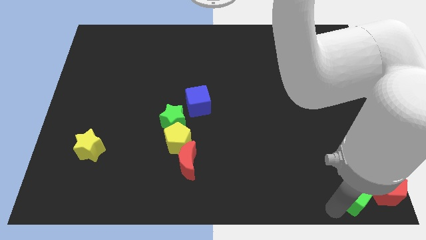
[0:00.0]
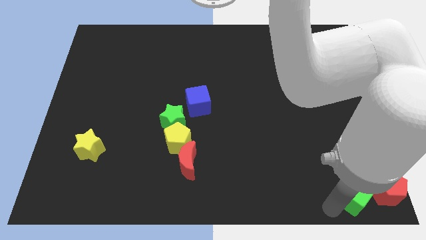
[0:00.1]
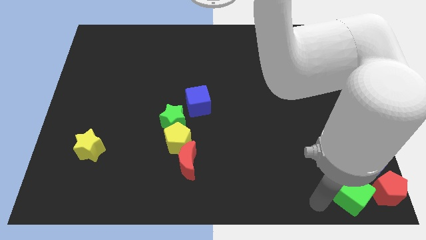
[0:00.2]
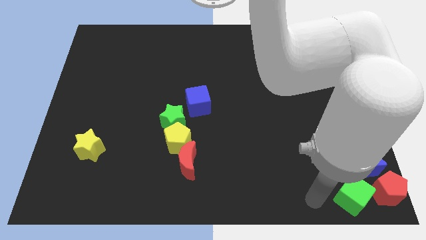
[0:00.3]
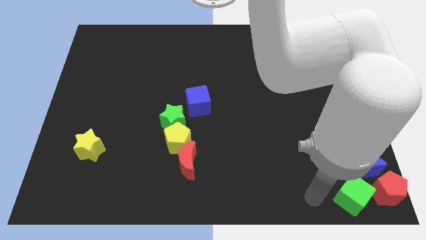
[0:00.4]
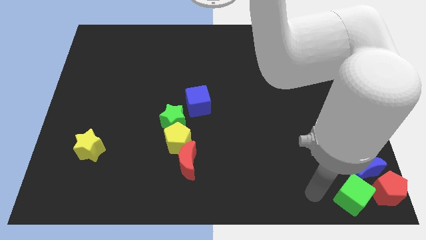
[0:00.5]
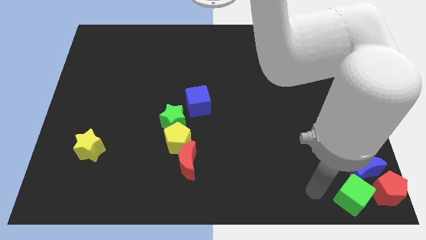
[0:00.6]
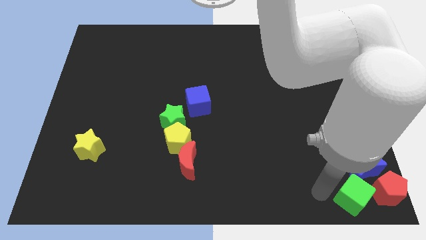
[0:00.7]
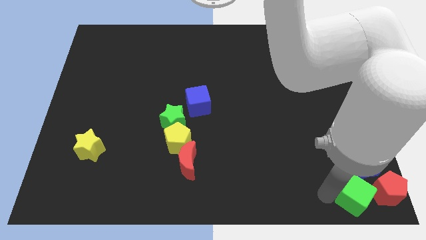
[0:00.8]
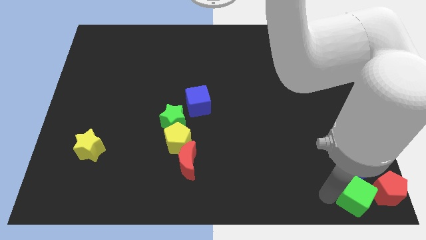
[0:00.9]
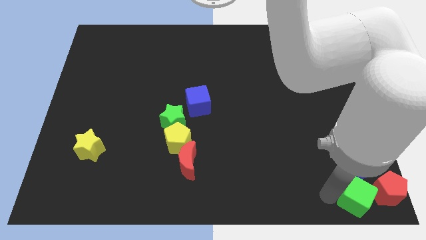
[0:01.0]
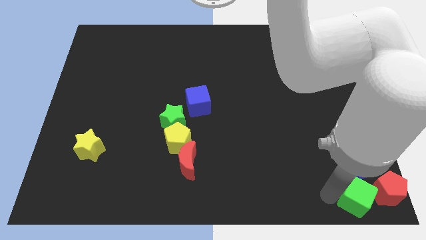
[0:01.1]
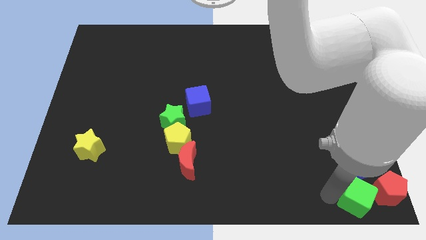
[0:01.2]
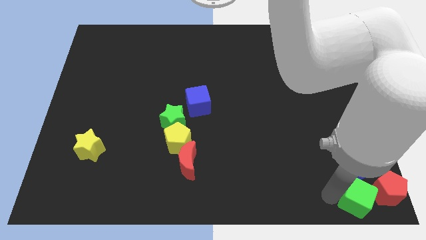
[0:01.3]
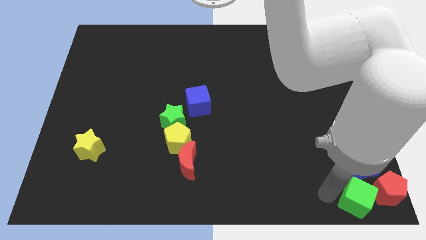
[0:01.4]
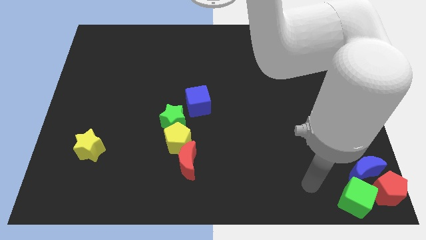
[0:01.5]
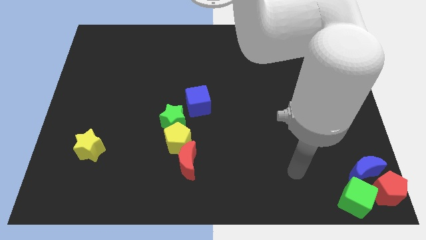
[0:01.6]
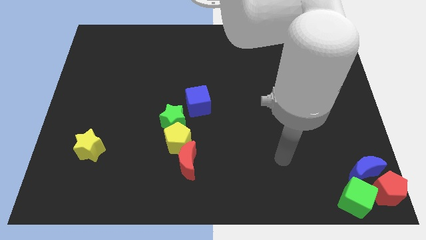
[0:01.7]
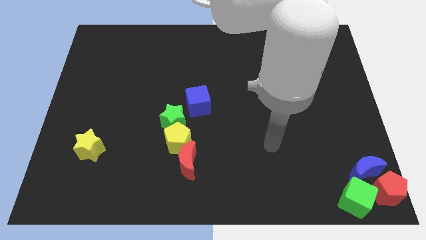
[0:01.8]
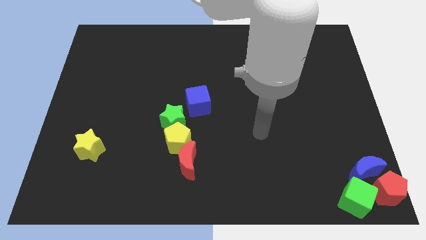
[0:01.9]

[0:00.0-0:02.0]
move yourself away from the green cube

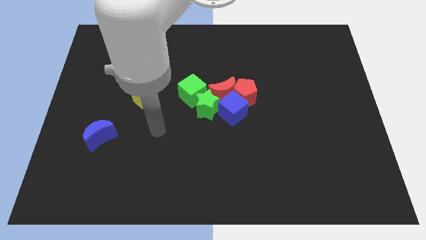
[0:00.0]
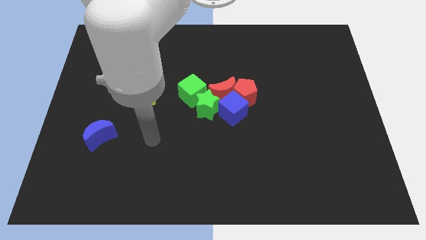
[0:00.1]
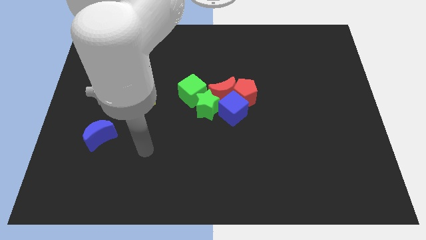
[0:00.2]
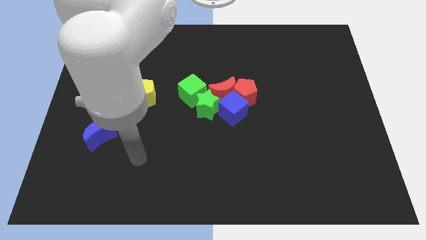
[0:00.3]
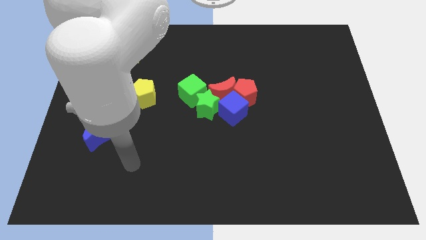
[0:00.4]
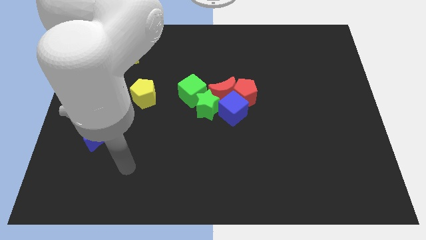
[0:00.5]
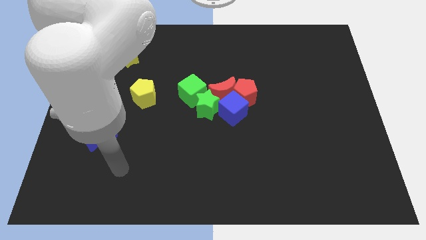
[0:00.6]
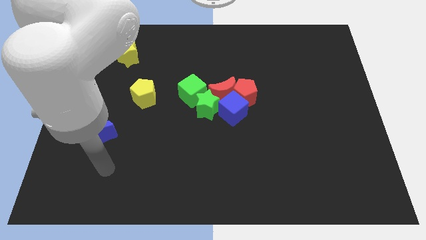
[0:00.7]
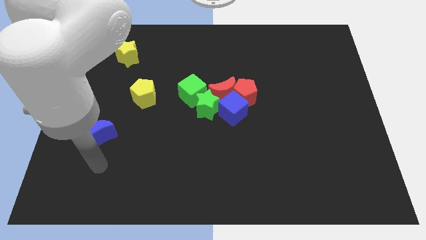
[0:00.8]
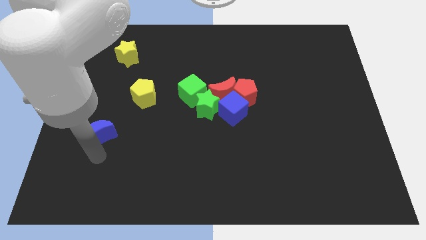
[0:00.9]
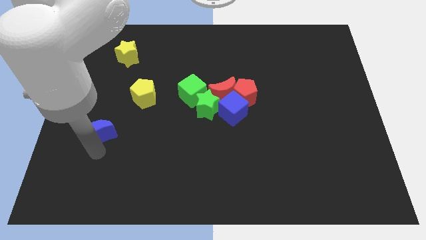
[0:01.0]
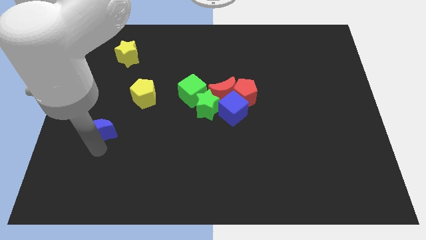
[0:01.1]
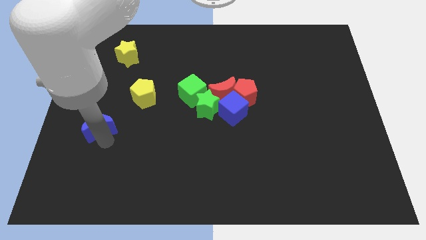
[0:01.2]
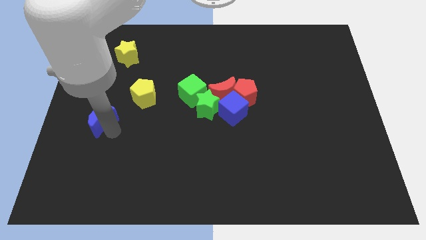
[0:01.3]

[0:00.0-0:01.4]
place the blue moon diagonally bottom left to the yellow pentagon

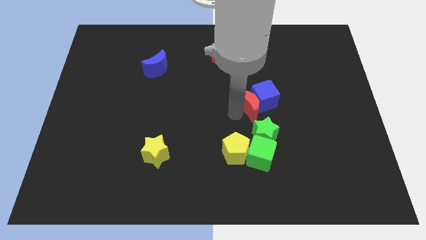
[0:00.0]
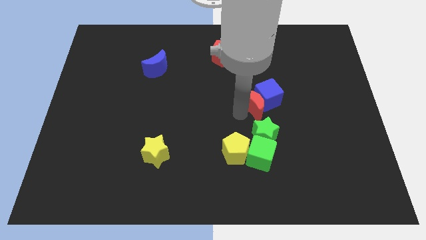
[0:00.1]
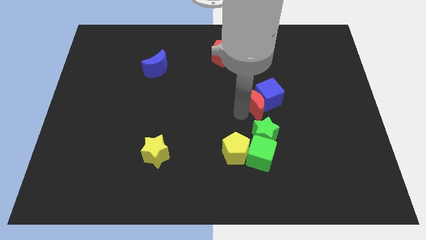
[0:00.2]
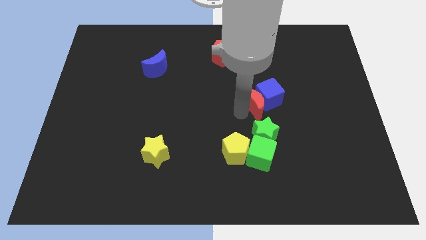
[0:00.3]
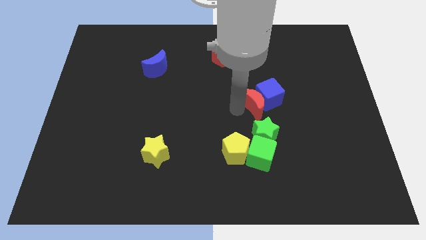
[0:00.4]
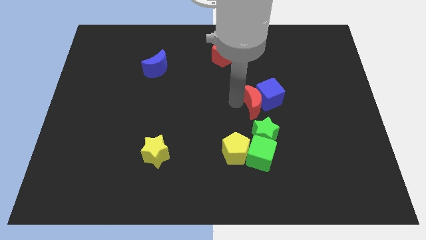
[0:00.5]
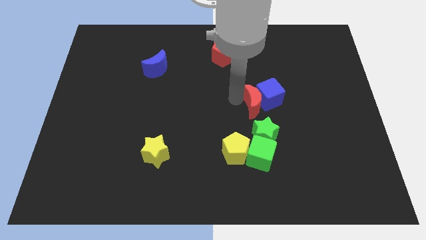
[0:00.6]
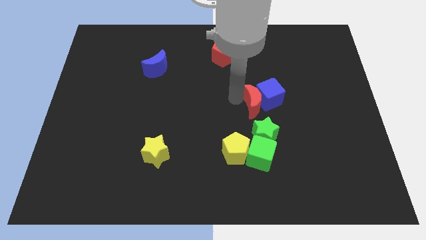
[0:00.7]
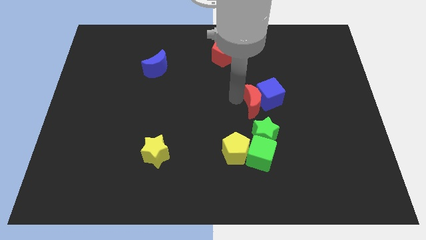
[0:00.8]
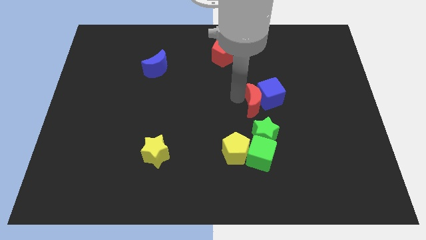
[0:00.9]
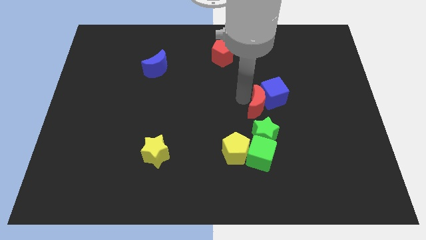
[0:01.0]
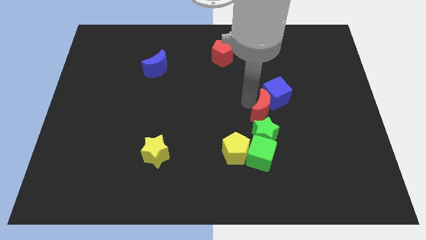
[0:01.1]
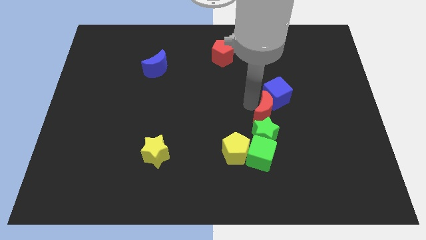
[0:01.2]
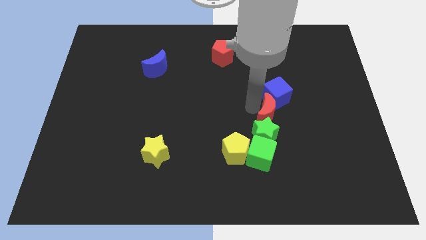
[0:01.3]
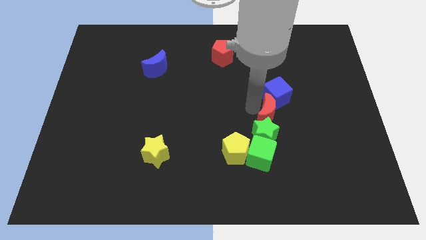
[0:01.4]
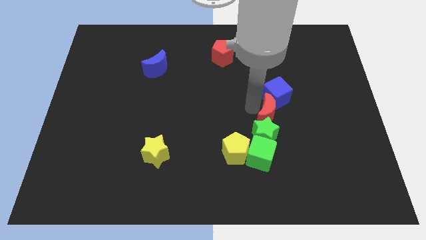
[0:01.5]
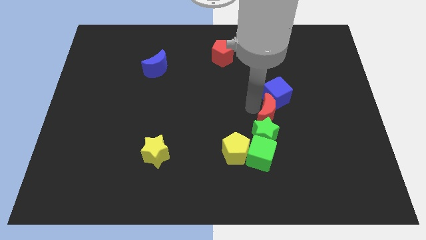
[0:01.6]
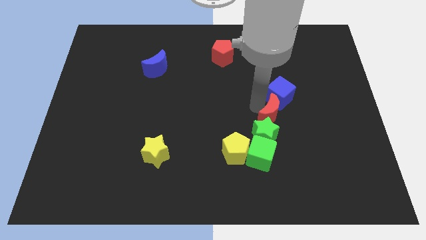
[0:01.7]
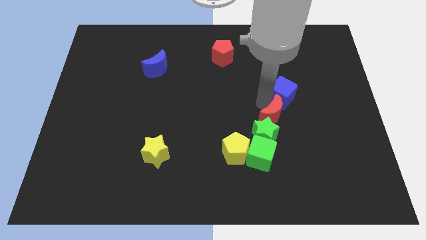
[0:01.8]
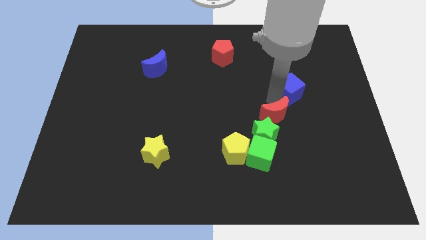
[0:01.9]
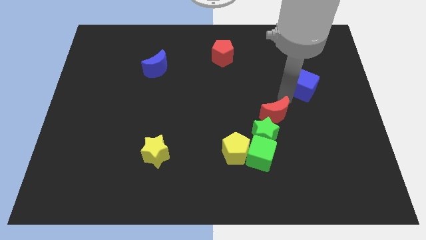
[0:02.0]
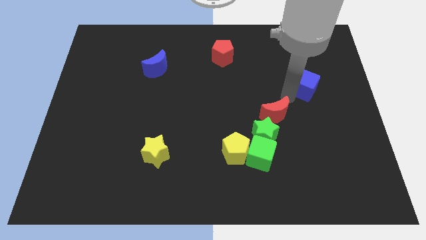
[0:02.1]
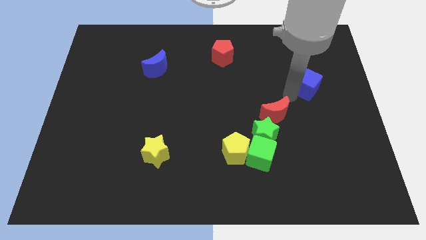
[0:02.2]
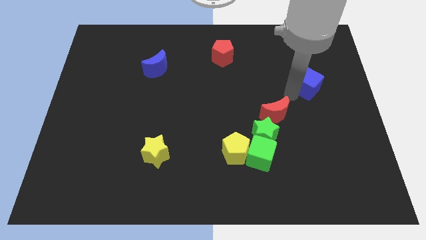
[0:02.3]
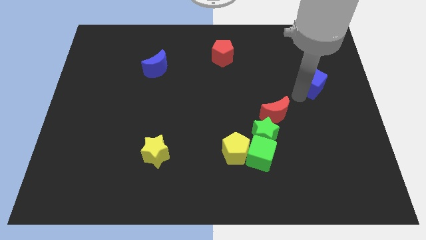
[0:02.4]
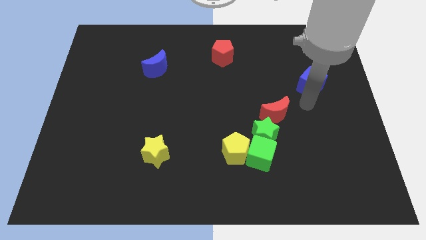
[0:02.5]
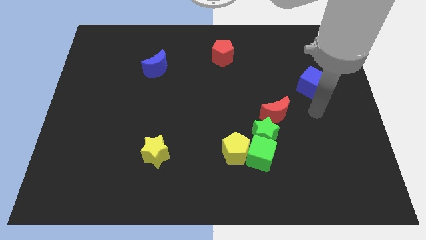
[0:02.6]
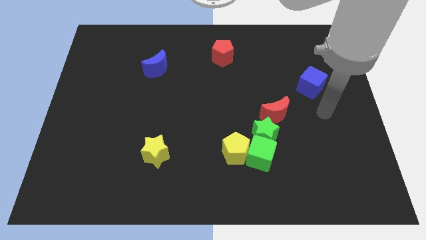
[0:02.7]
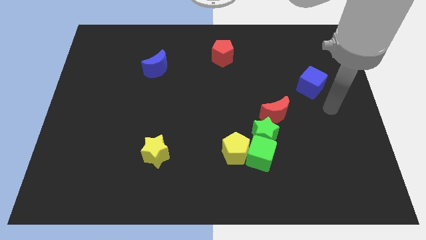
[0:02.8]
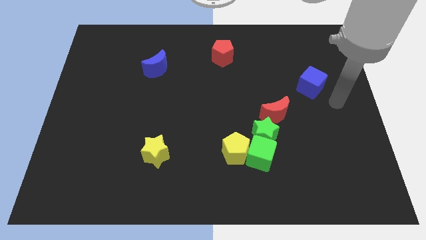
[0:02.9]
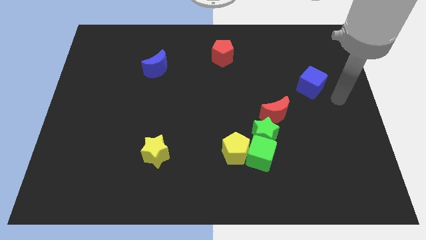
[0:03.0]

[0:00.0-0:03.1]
separate blue cube from the red moon

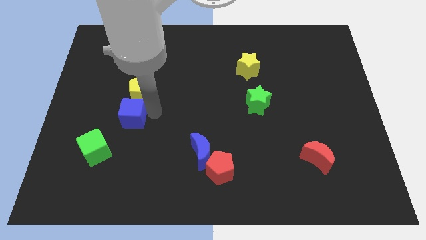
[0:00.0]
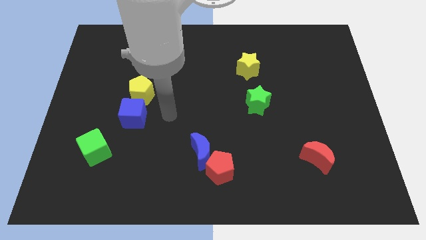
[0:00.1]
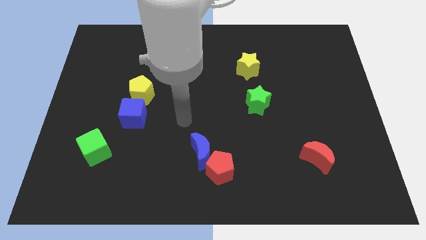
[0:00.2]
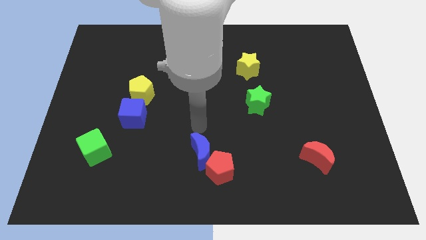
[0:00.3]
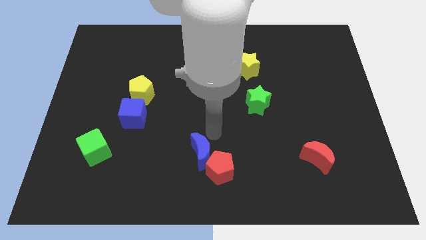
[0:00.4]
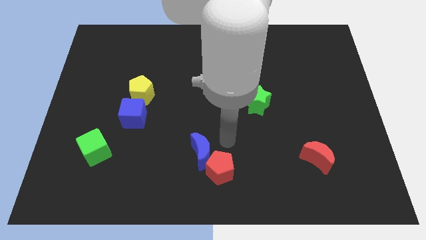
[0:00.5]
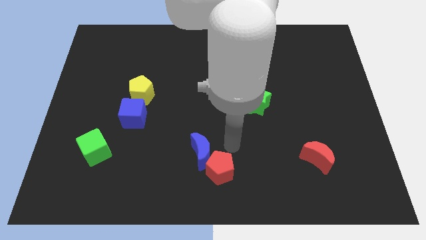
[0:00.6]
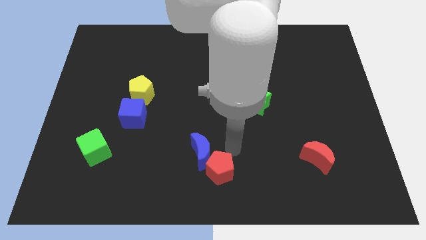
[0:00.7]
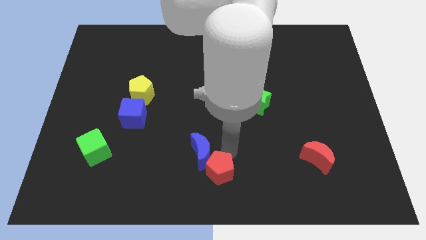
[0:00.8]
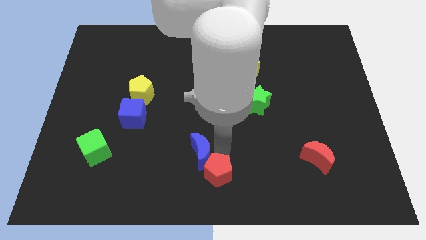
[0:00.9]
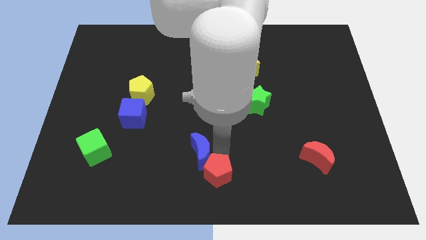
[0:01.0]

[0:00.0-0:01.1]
point your arm at the top of the red pentagon

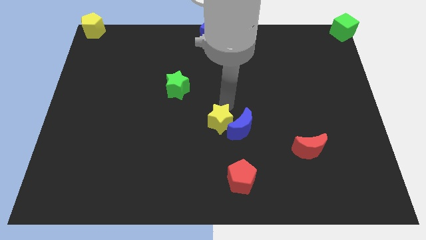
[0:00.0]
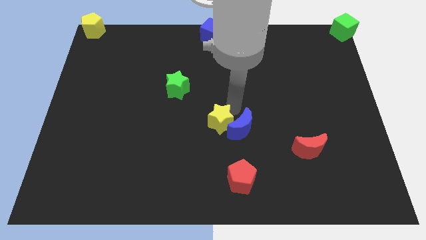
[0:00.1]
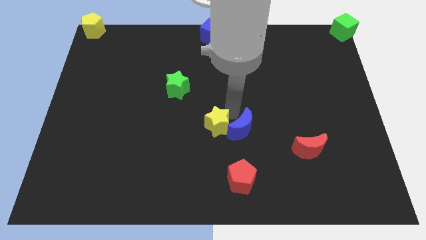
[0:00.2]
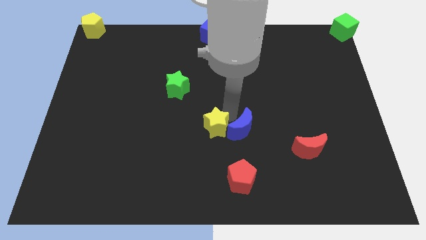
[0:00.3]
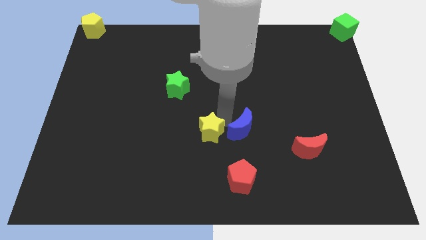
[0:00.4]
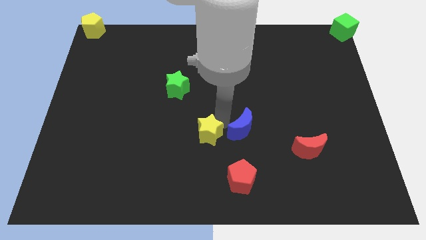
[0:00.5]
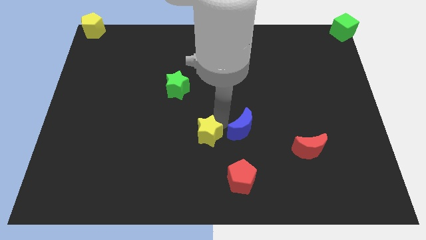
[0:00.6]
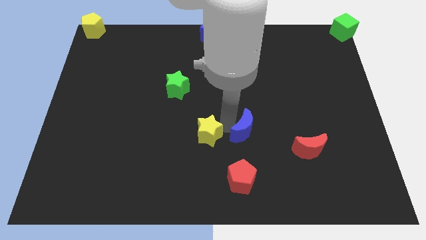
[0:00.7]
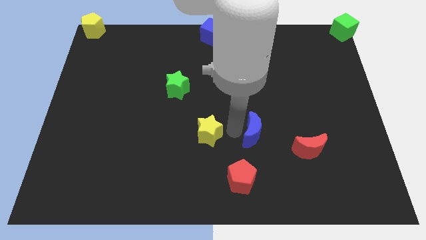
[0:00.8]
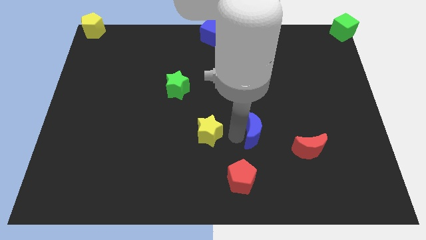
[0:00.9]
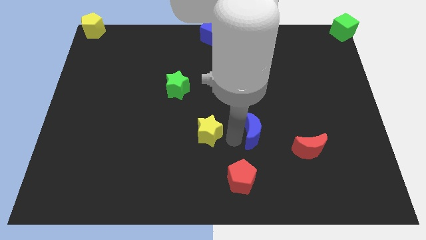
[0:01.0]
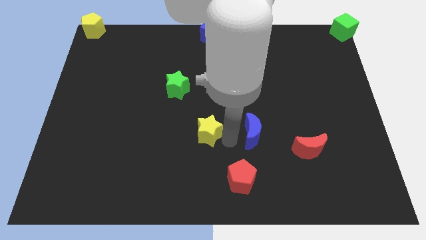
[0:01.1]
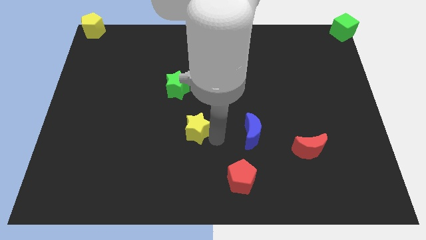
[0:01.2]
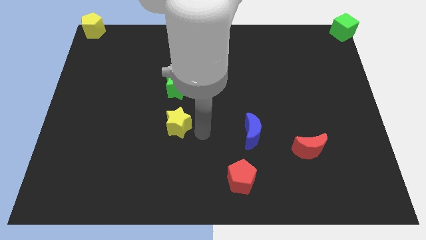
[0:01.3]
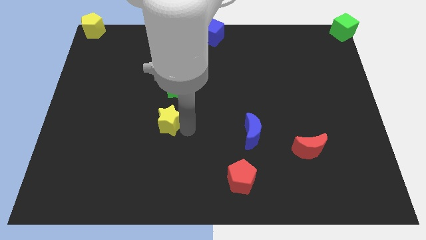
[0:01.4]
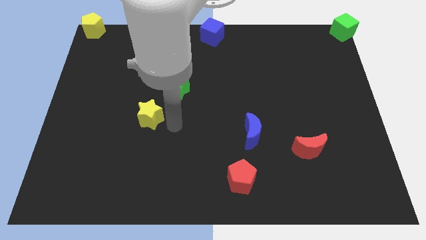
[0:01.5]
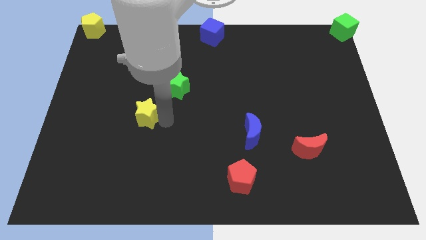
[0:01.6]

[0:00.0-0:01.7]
separate the yellow star from the blue moon
